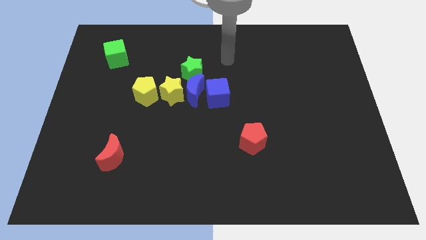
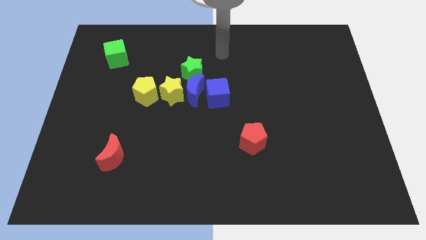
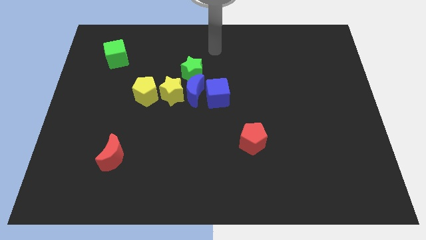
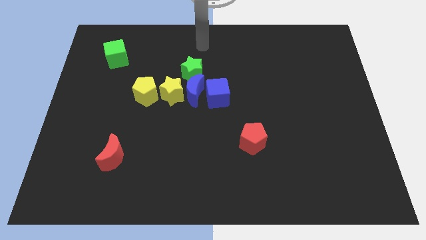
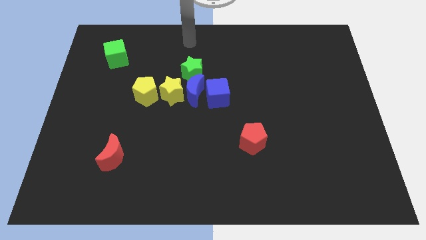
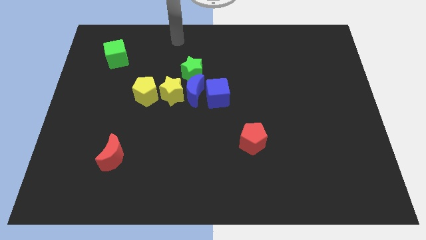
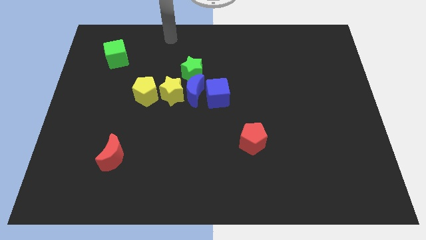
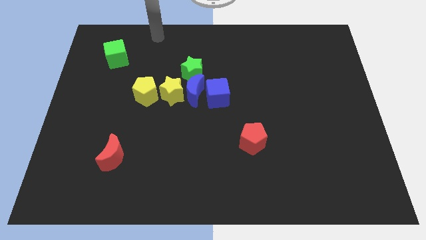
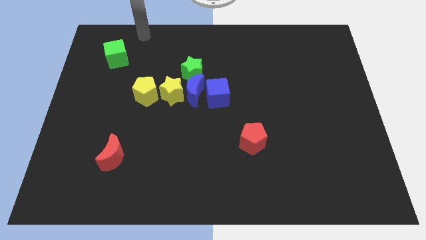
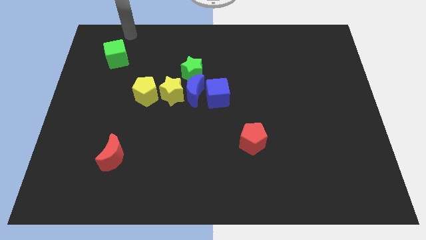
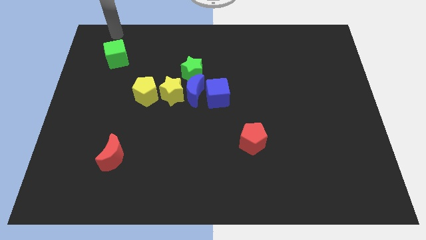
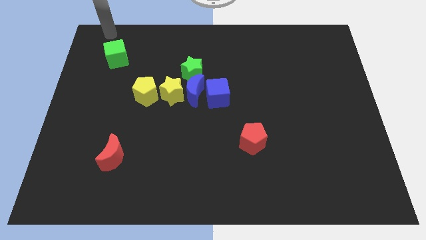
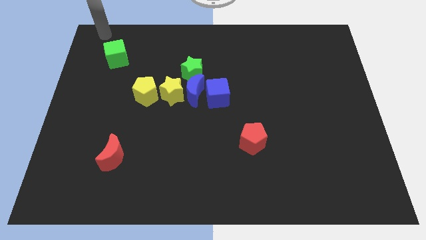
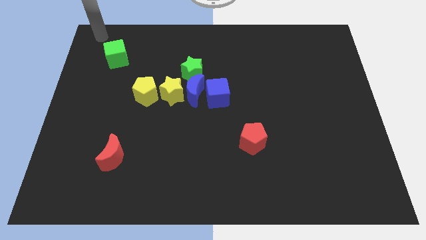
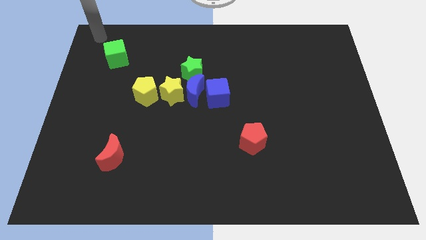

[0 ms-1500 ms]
move your arm to the top left side of the board

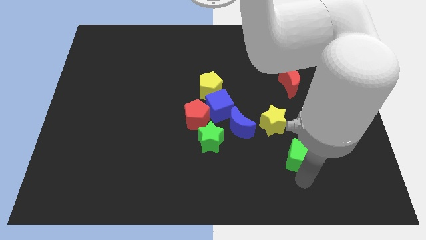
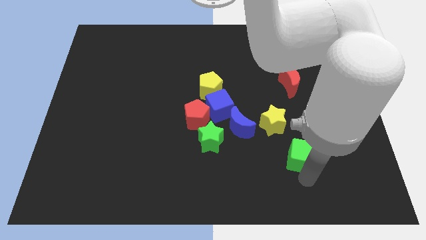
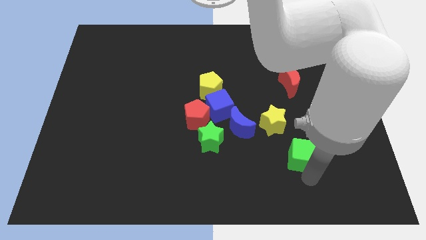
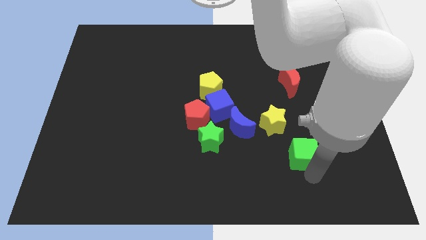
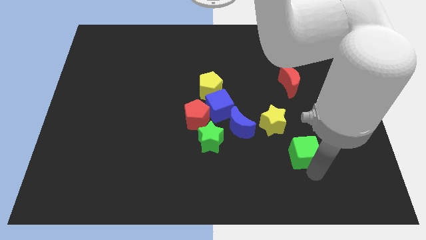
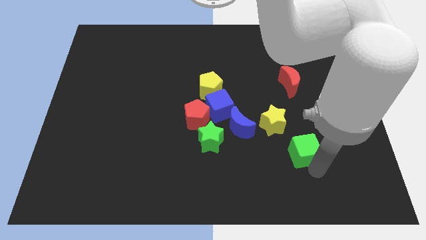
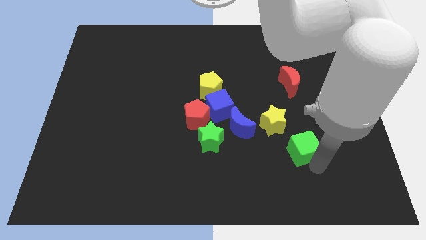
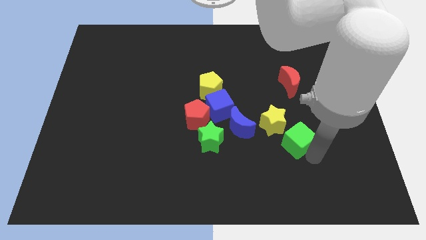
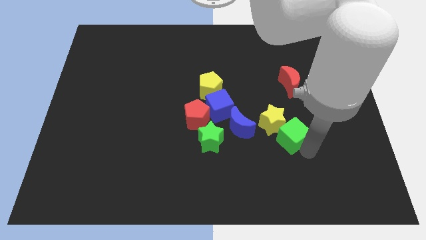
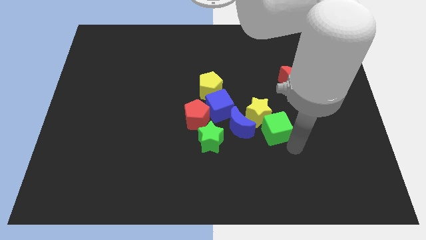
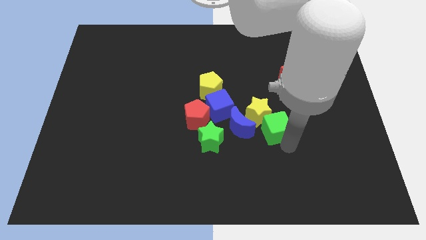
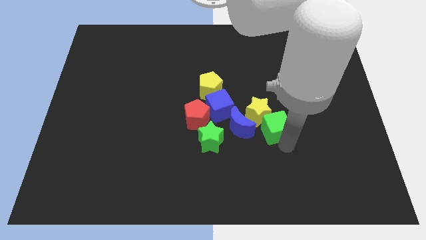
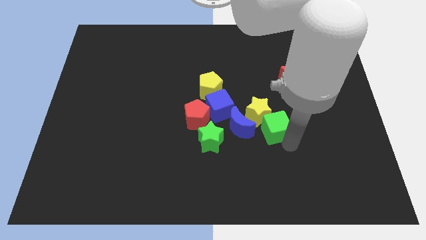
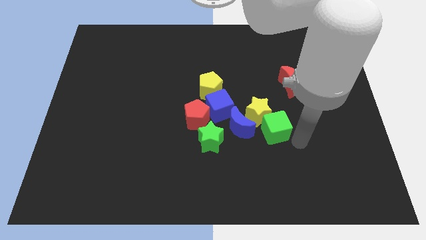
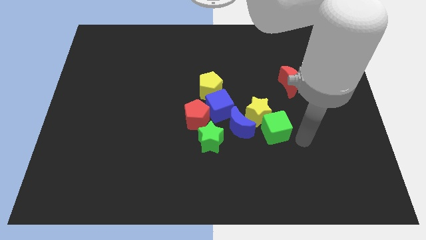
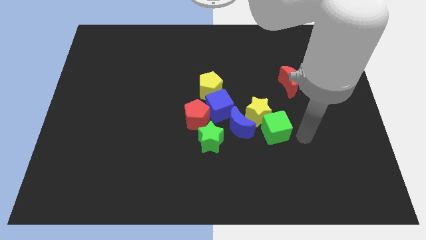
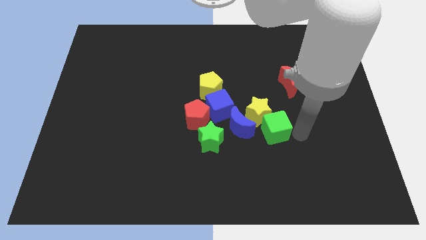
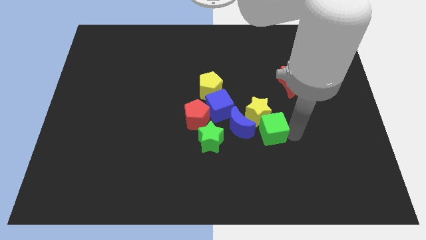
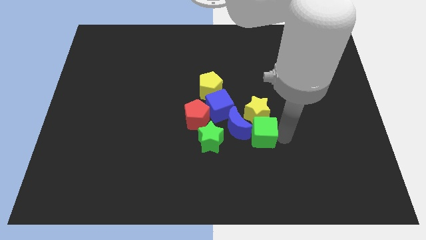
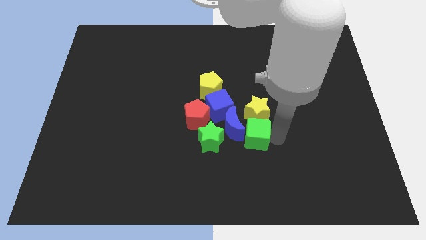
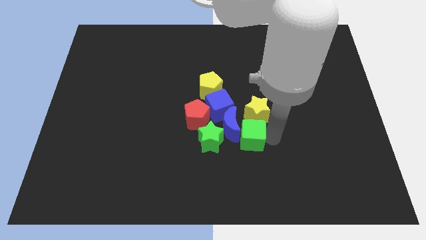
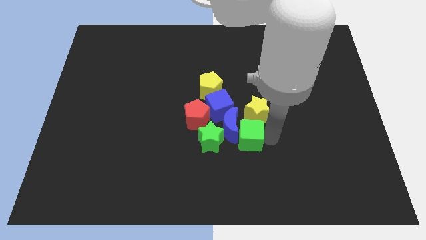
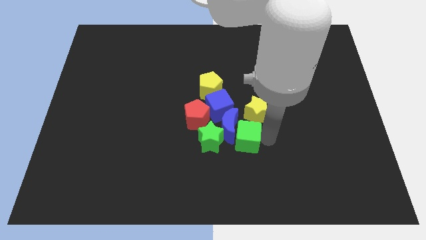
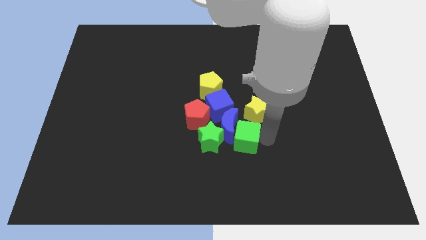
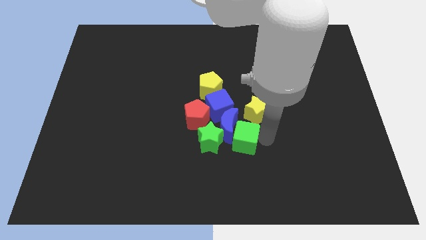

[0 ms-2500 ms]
place green cube beside blue crescent

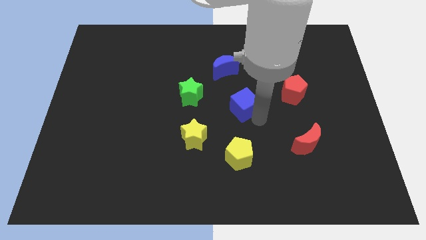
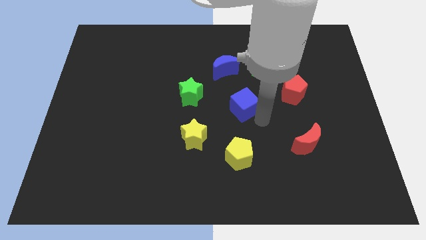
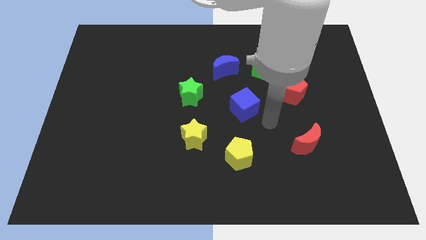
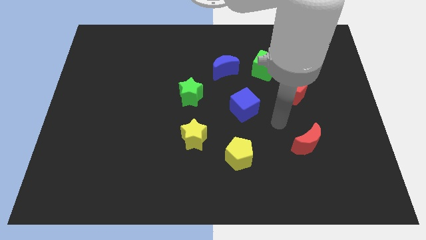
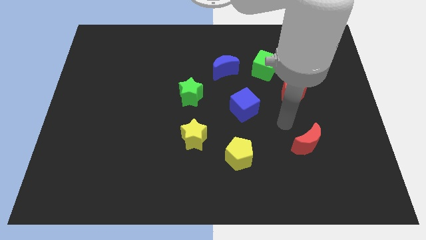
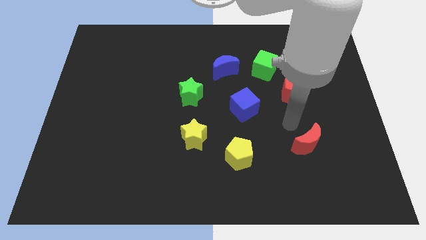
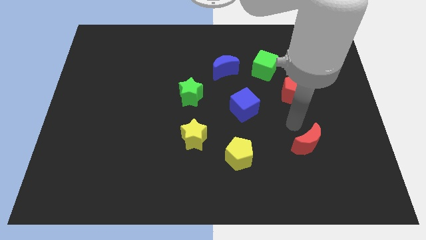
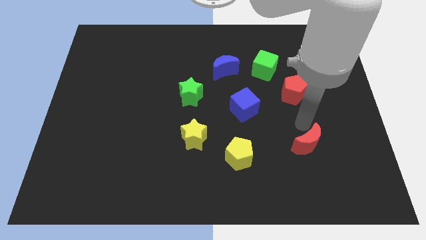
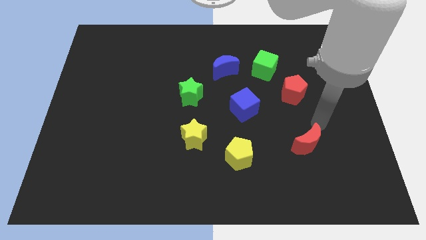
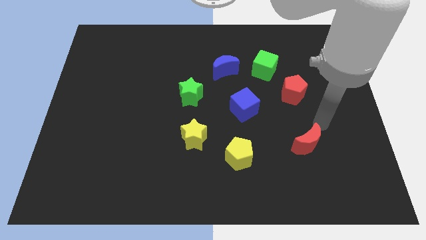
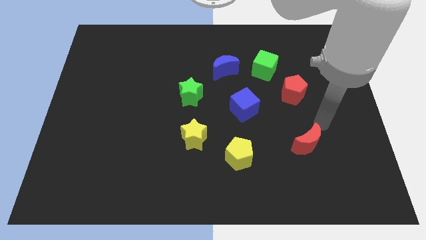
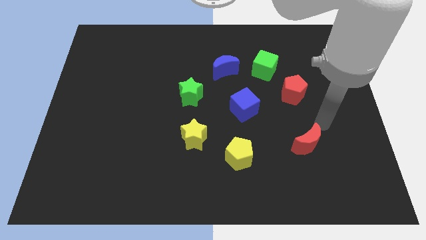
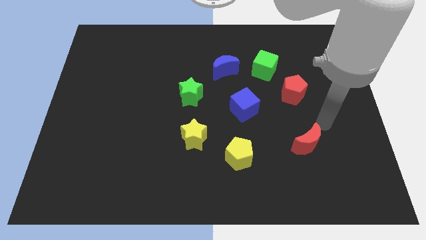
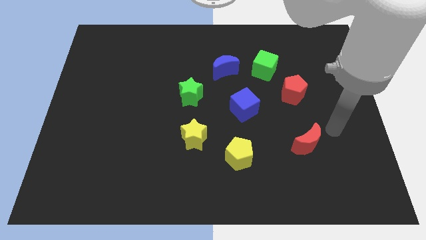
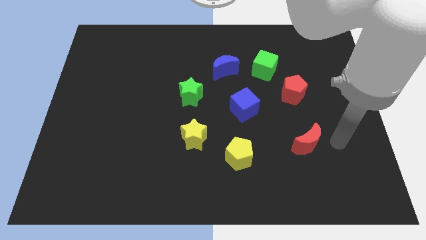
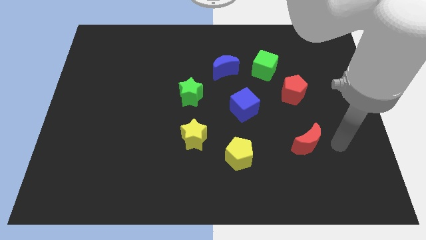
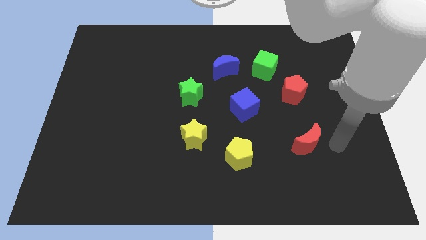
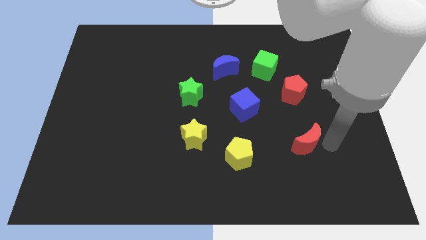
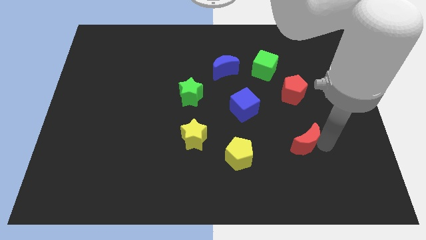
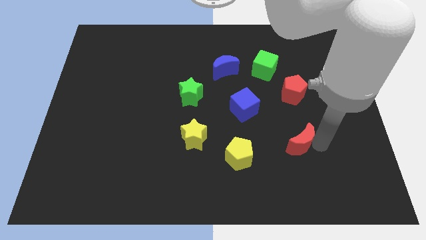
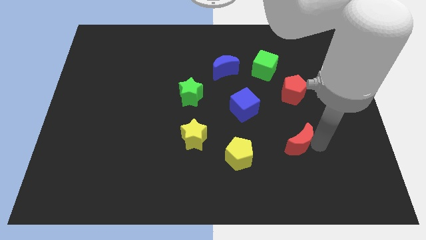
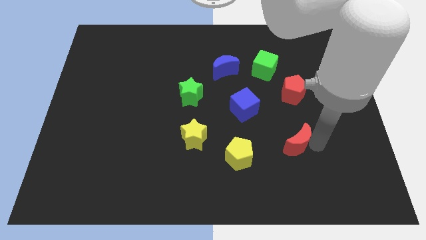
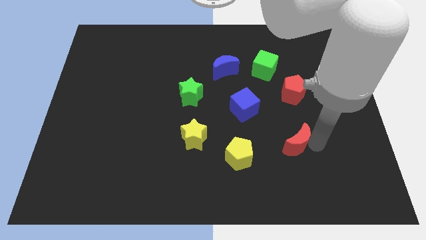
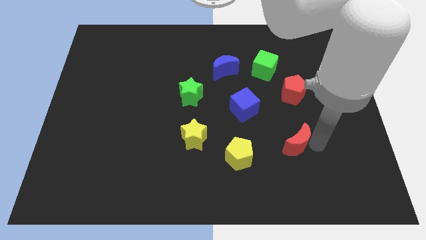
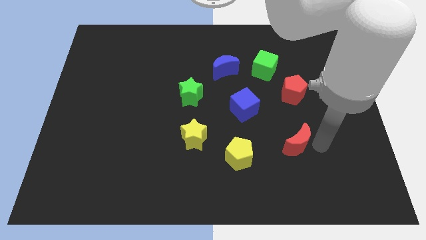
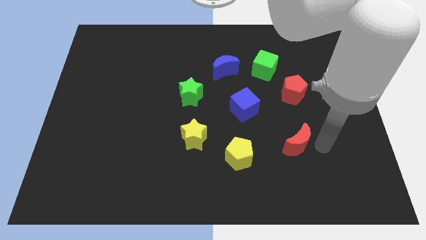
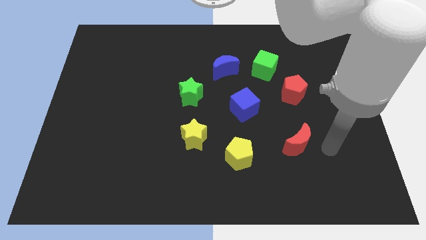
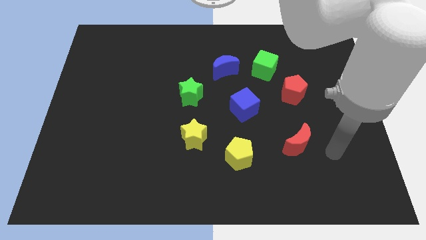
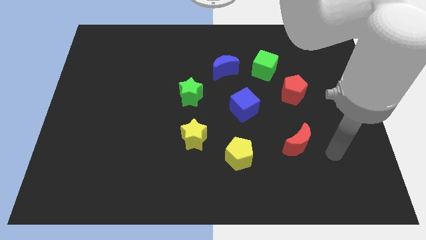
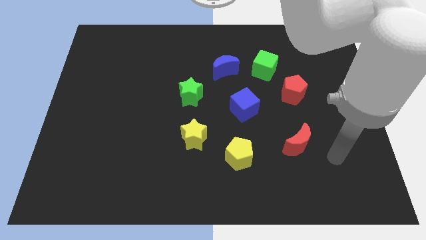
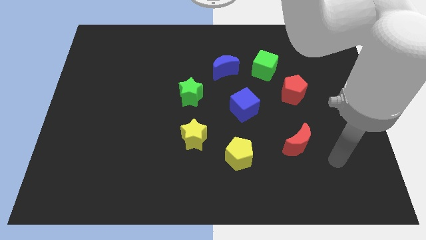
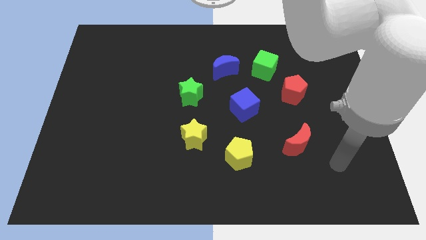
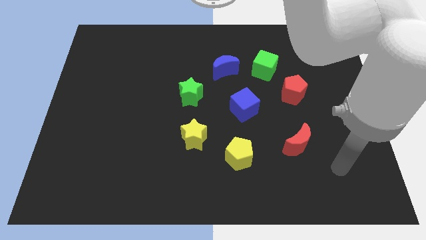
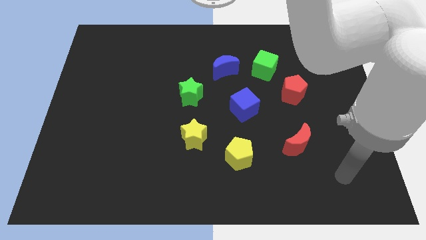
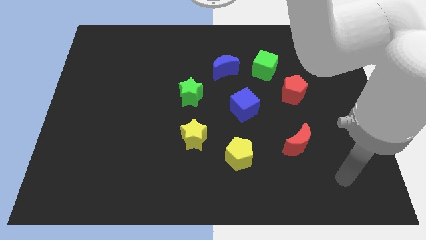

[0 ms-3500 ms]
move the red moon slightly towards the blue cube

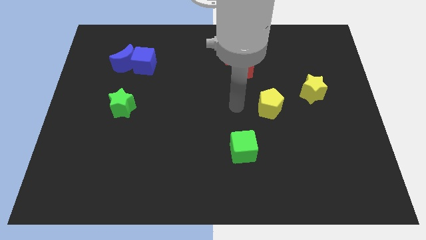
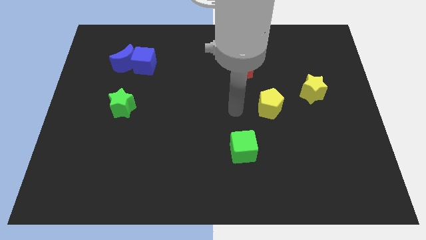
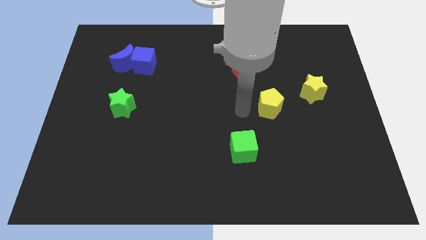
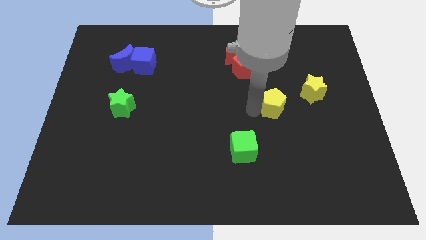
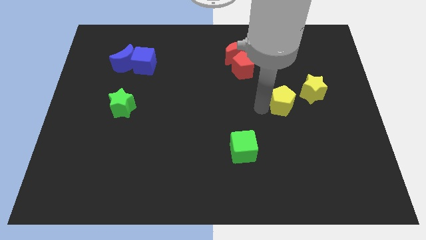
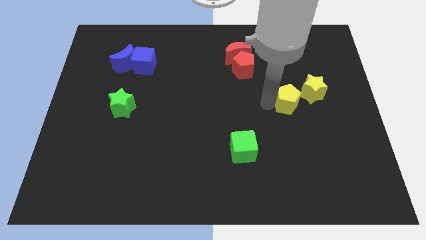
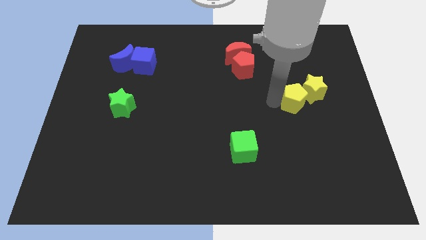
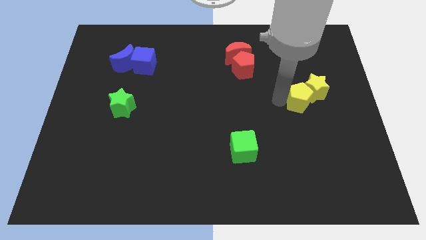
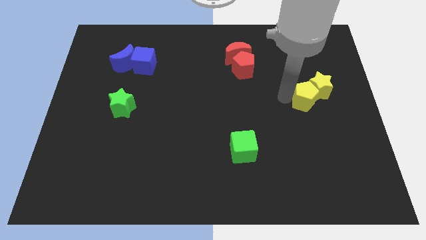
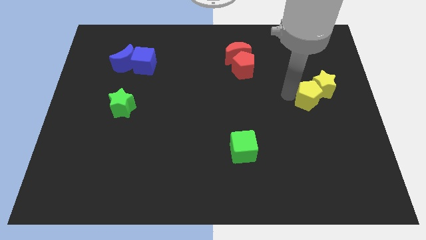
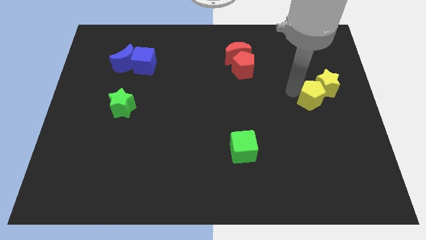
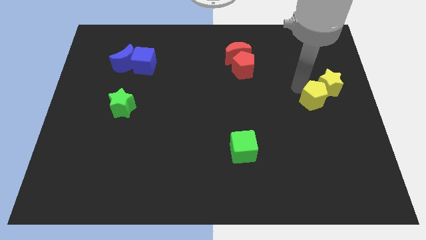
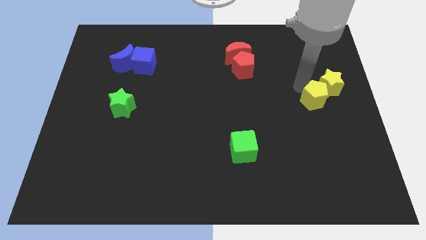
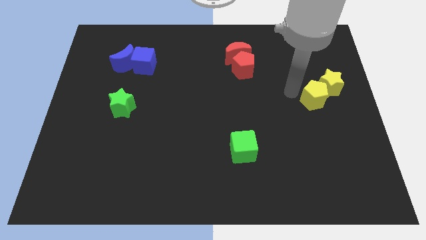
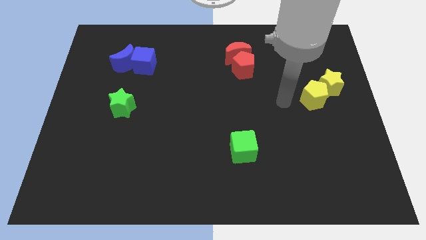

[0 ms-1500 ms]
move the yellow pentagon close to the yellow star
